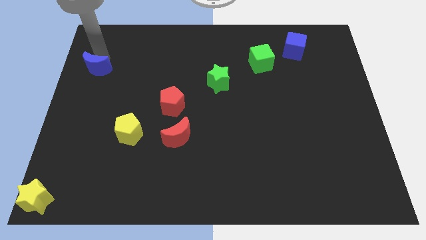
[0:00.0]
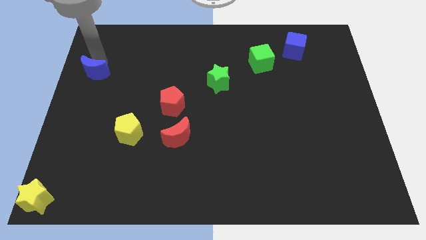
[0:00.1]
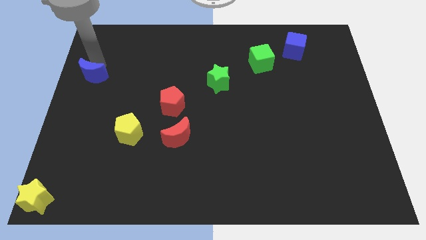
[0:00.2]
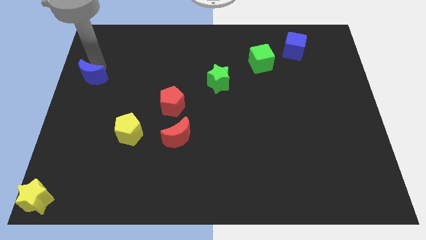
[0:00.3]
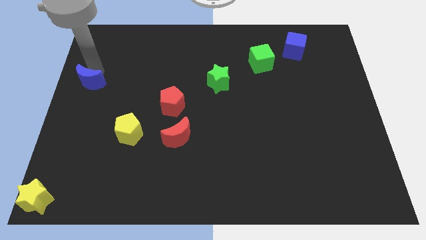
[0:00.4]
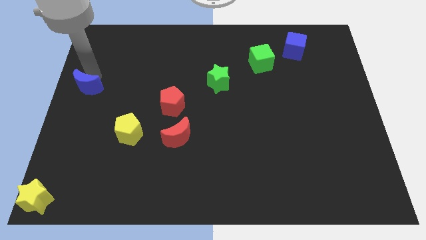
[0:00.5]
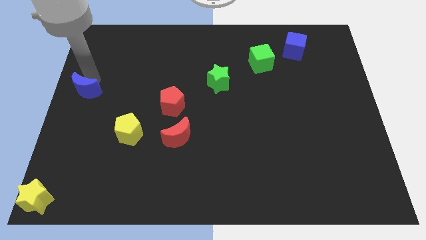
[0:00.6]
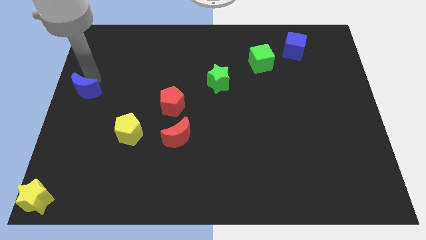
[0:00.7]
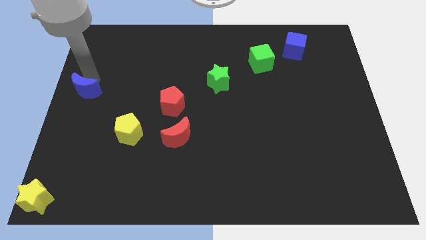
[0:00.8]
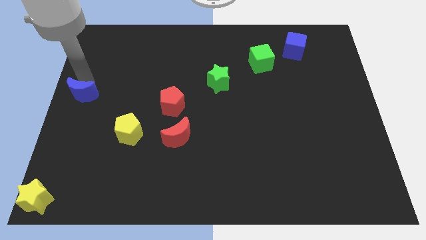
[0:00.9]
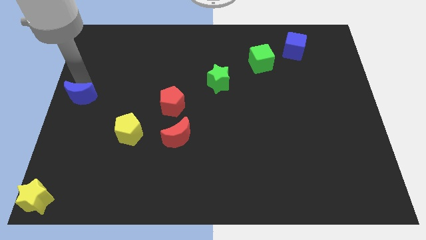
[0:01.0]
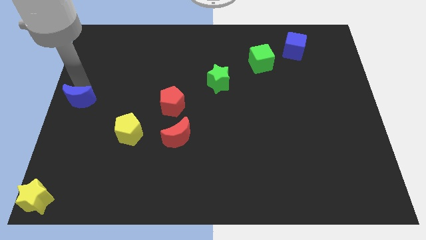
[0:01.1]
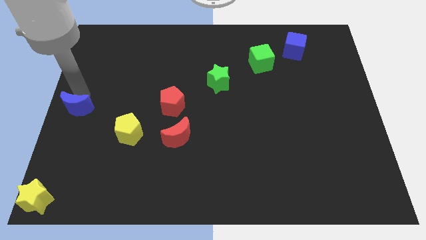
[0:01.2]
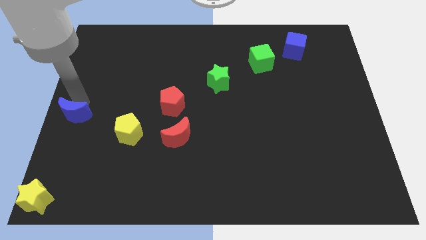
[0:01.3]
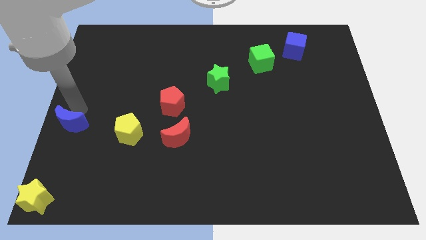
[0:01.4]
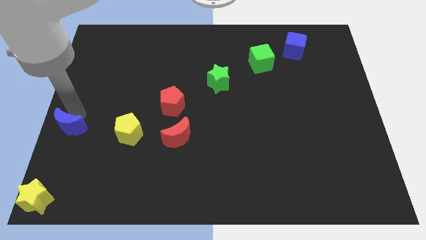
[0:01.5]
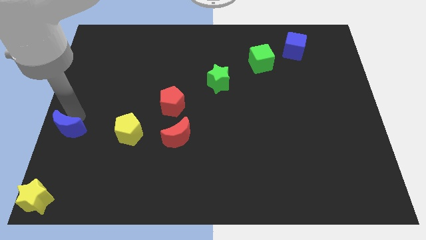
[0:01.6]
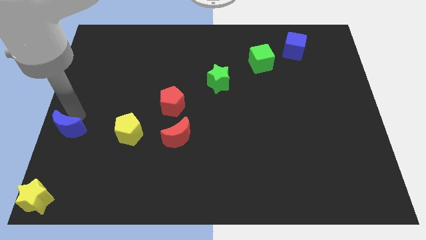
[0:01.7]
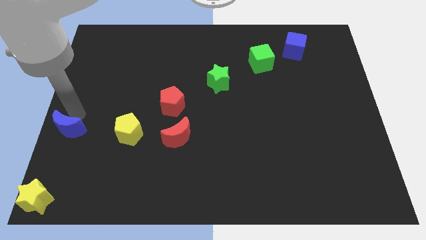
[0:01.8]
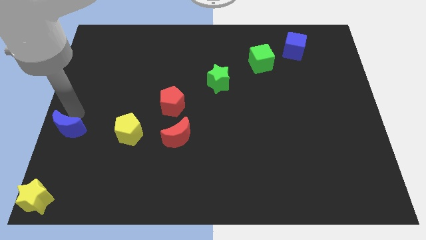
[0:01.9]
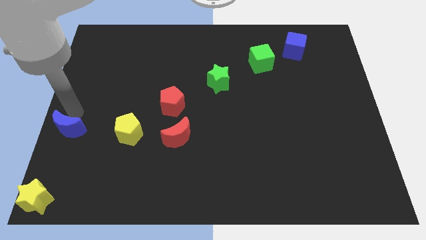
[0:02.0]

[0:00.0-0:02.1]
slide blue moon to the center left

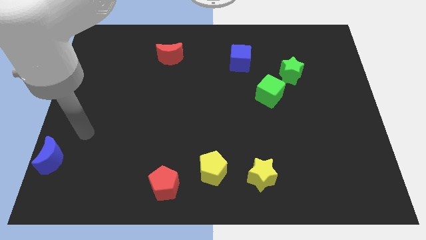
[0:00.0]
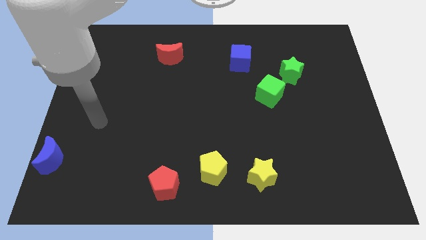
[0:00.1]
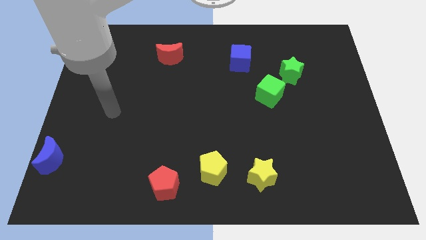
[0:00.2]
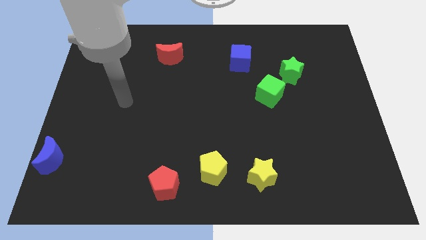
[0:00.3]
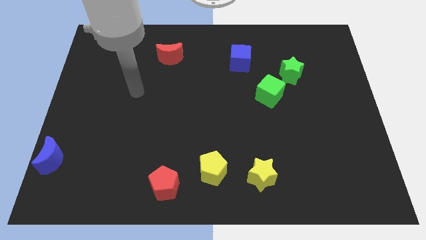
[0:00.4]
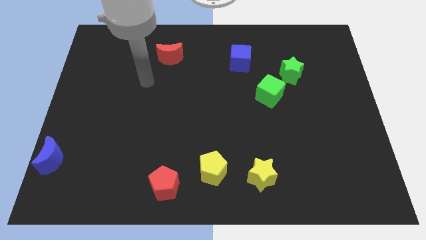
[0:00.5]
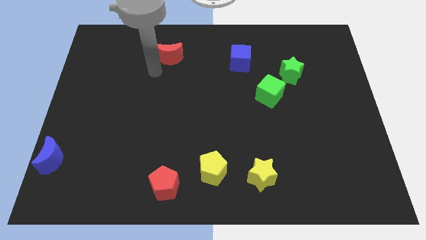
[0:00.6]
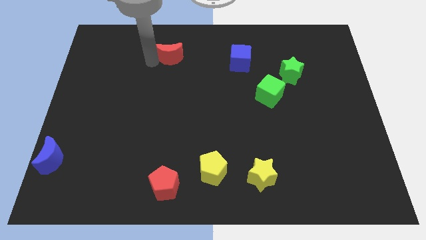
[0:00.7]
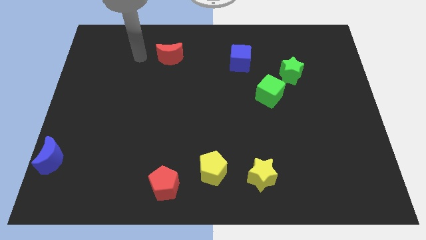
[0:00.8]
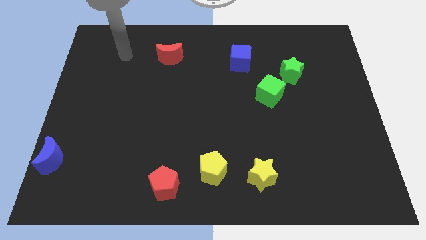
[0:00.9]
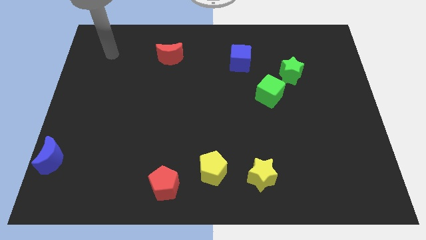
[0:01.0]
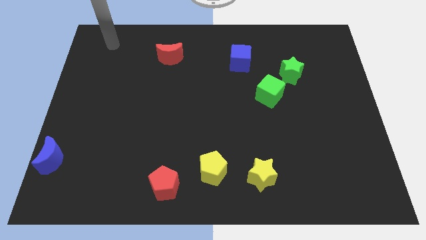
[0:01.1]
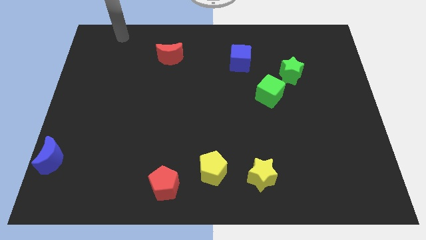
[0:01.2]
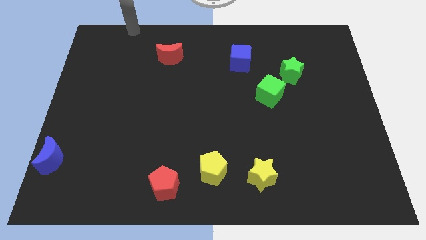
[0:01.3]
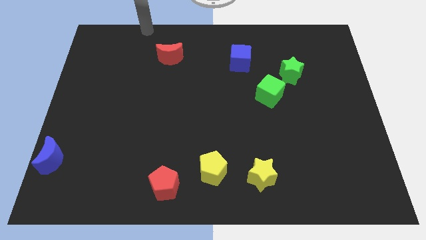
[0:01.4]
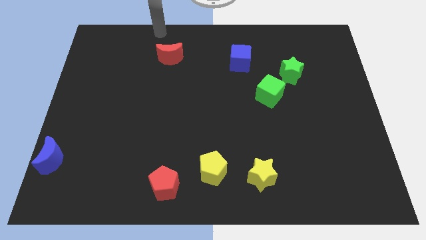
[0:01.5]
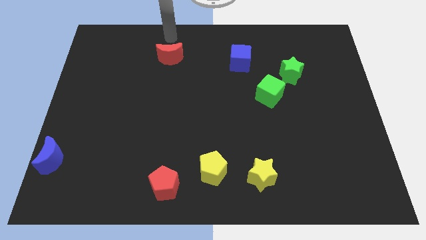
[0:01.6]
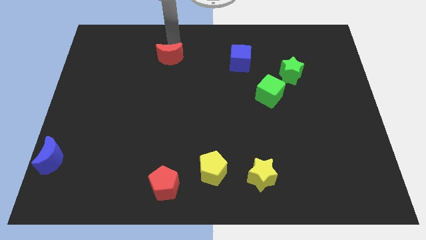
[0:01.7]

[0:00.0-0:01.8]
place the arm above the red moon

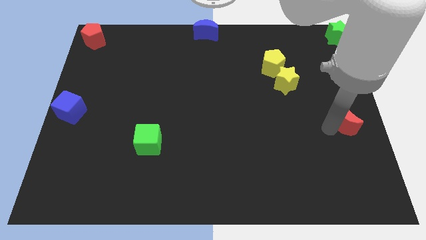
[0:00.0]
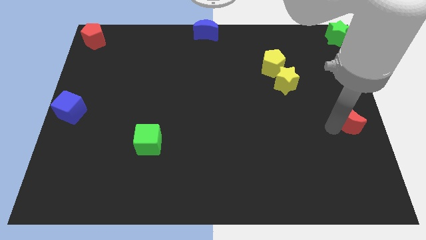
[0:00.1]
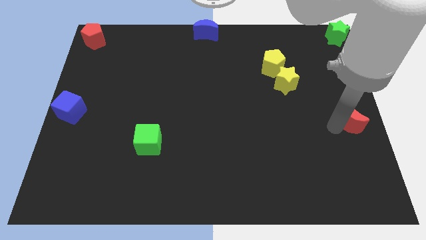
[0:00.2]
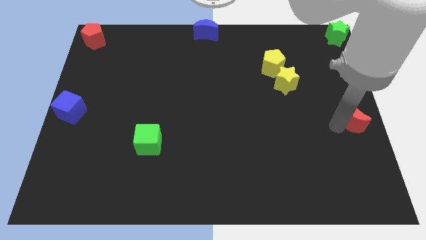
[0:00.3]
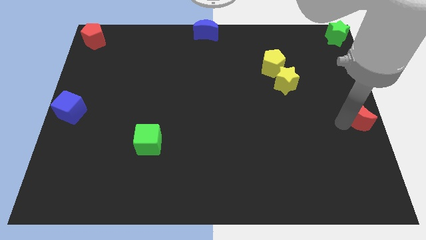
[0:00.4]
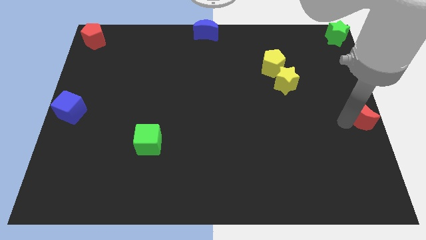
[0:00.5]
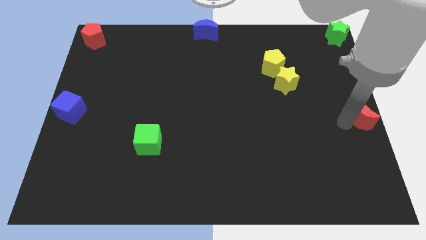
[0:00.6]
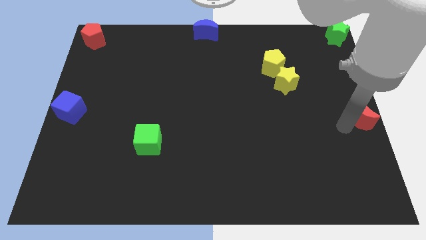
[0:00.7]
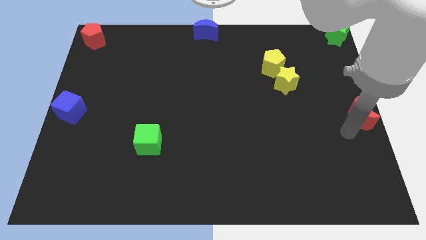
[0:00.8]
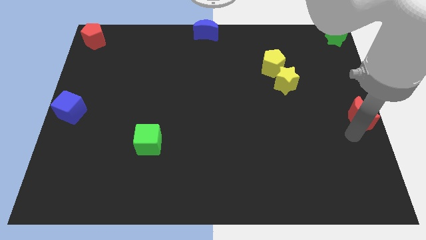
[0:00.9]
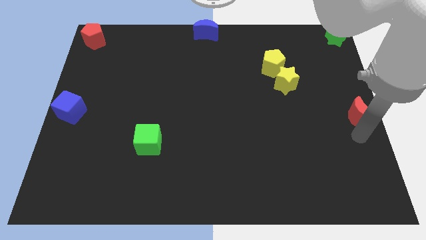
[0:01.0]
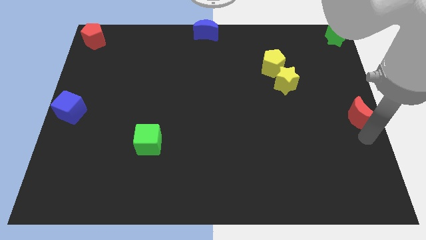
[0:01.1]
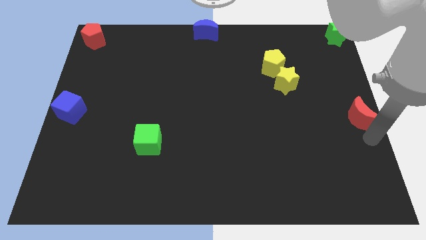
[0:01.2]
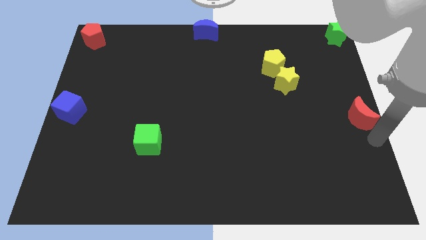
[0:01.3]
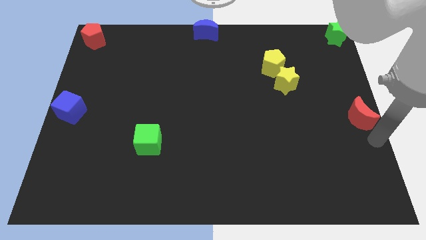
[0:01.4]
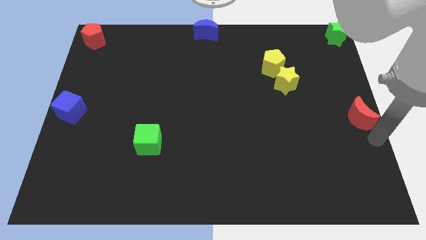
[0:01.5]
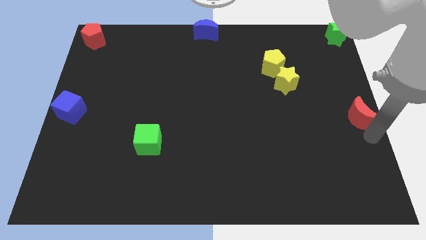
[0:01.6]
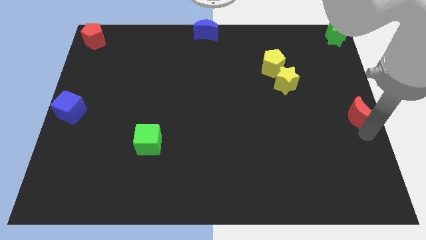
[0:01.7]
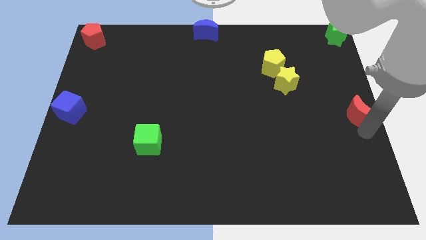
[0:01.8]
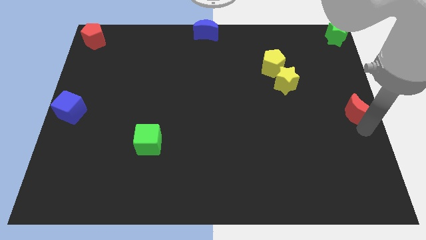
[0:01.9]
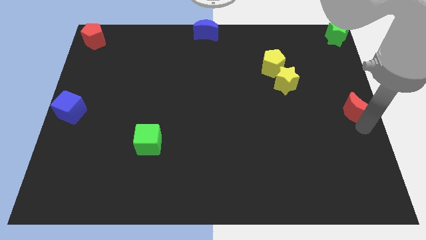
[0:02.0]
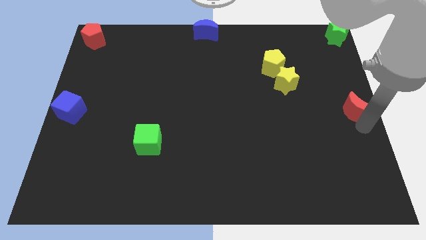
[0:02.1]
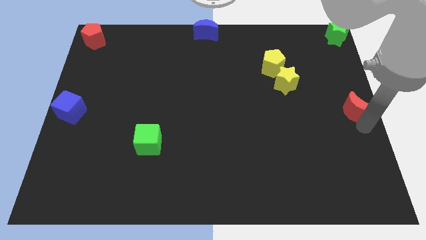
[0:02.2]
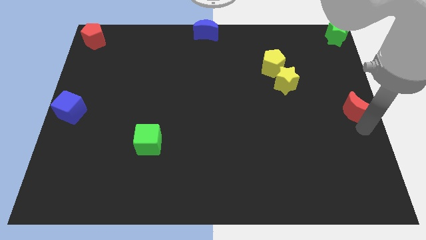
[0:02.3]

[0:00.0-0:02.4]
push the red moon towards the middle right corner of the board

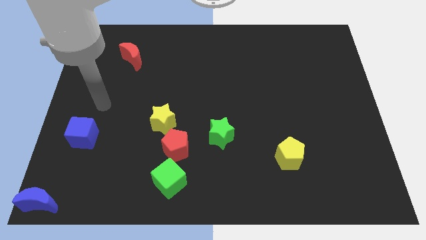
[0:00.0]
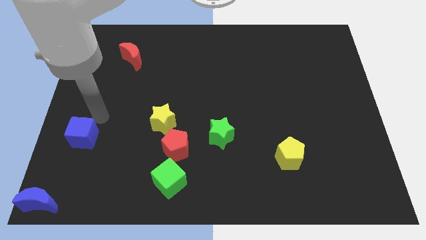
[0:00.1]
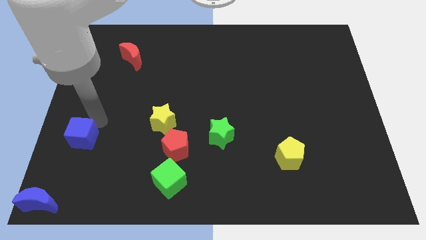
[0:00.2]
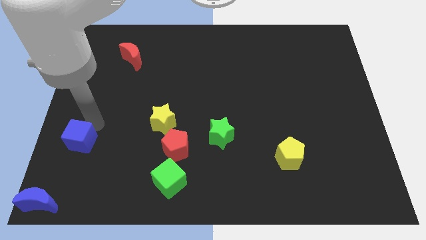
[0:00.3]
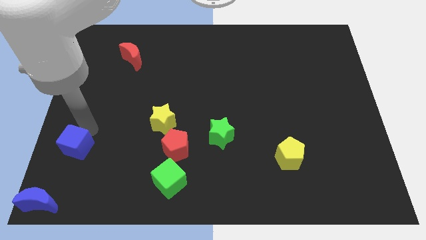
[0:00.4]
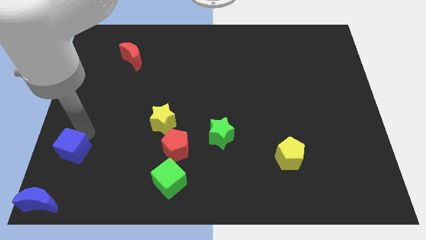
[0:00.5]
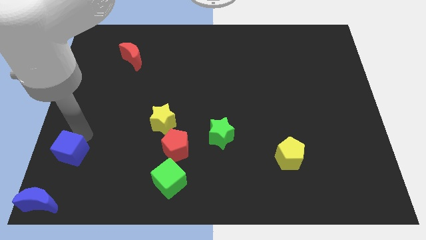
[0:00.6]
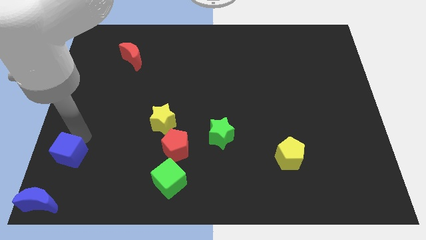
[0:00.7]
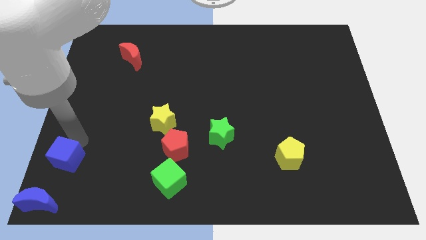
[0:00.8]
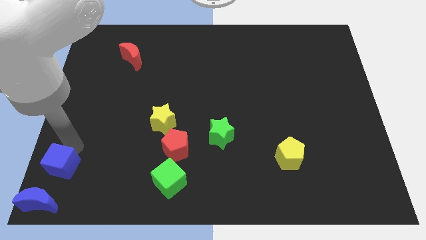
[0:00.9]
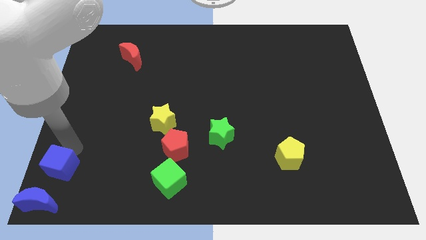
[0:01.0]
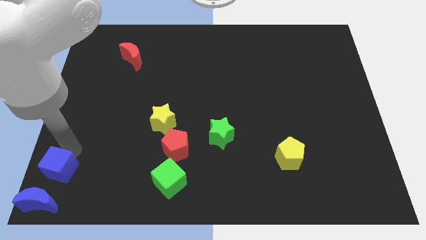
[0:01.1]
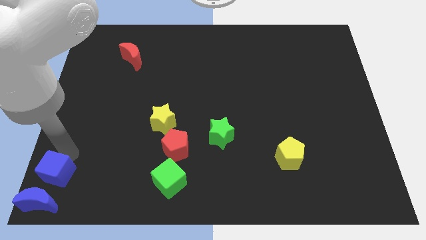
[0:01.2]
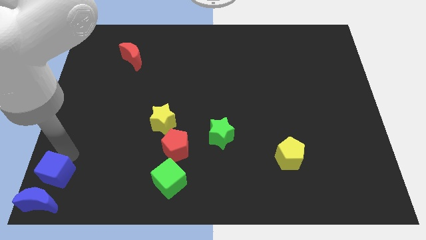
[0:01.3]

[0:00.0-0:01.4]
put the blue cube parallel left to the green cube

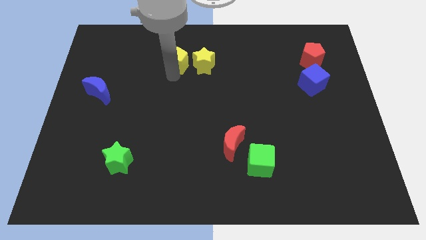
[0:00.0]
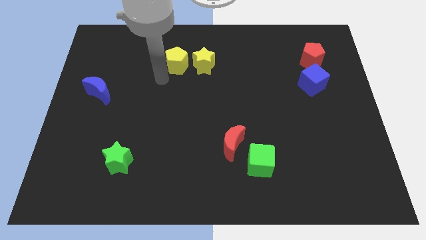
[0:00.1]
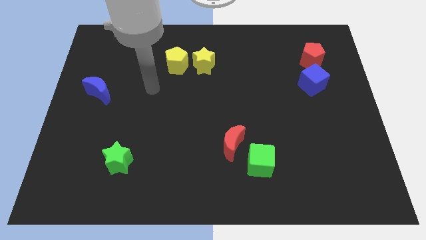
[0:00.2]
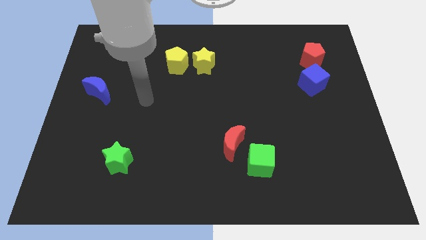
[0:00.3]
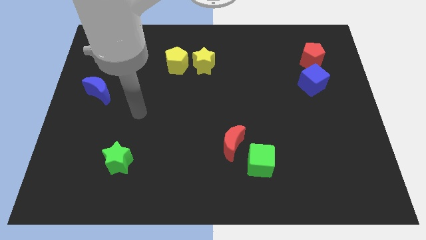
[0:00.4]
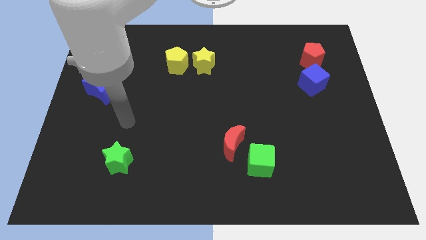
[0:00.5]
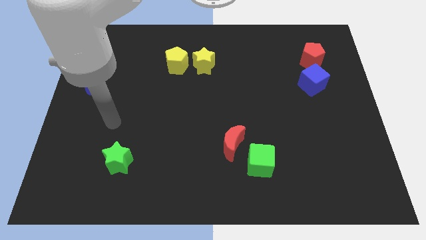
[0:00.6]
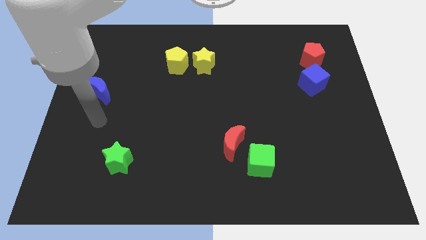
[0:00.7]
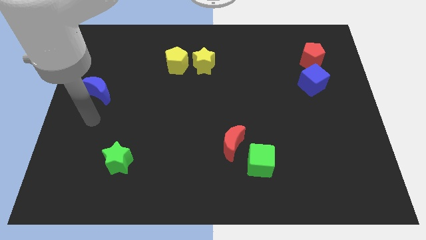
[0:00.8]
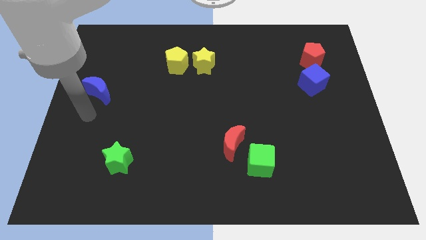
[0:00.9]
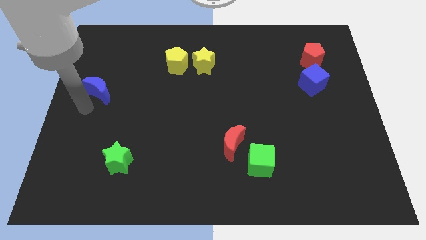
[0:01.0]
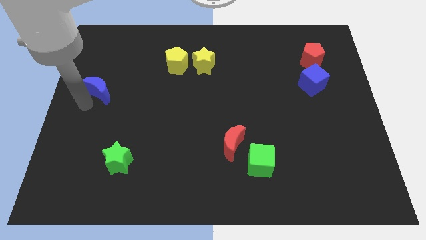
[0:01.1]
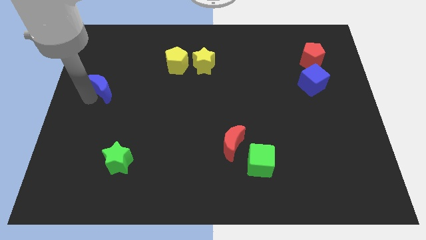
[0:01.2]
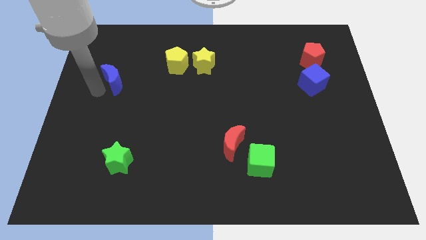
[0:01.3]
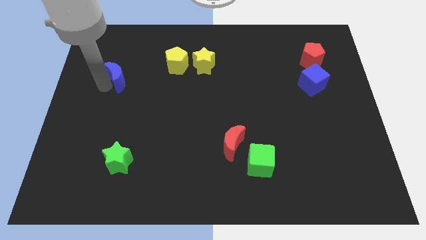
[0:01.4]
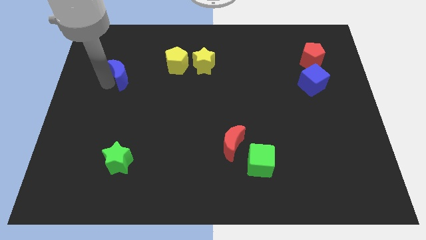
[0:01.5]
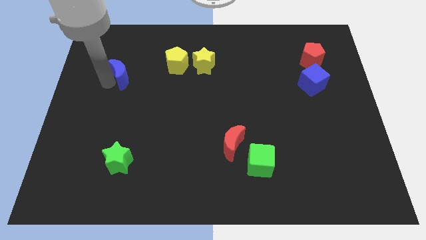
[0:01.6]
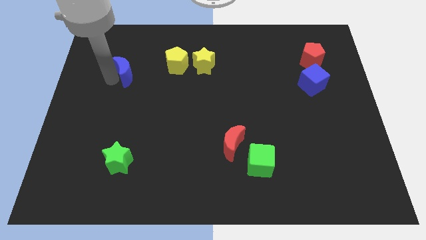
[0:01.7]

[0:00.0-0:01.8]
move your arm away from the yellow pentagon
